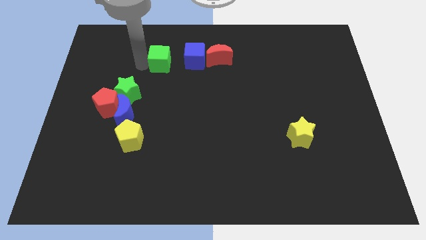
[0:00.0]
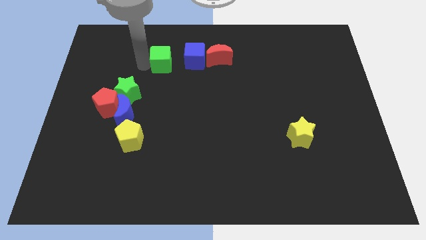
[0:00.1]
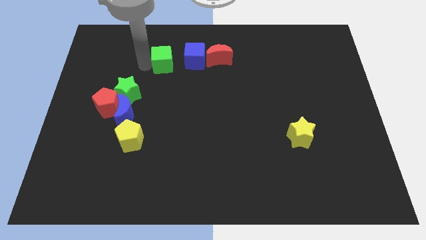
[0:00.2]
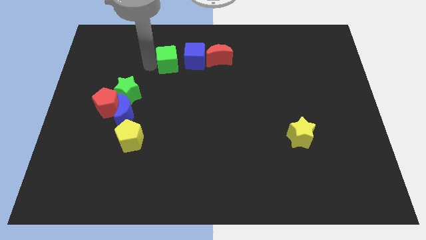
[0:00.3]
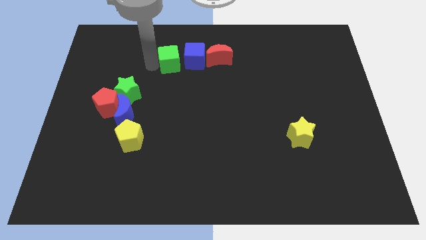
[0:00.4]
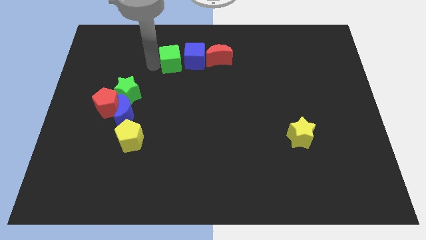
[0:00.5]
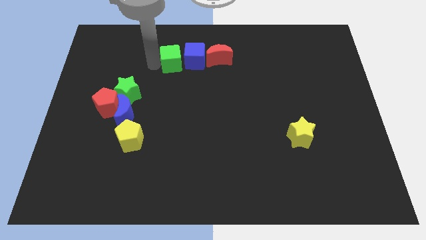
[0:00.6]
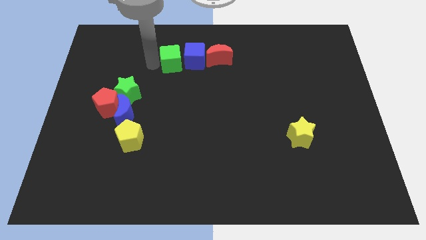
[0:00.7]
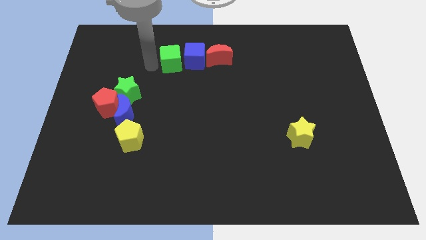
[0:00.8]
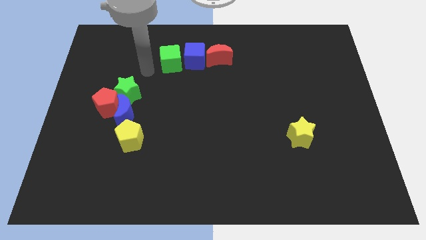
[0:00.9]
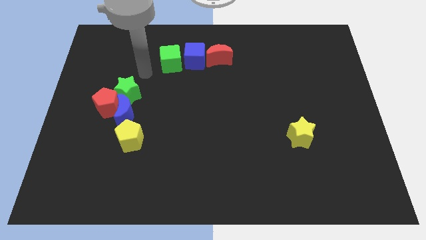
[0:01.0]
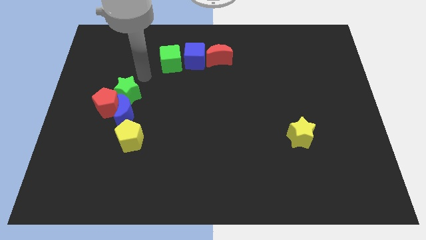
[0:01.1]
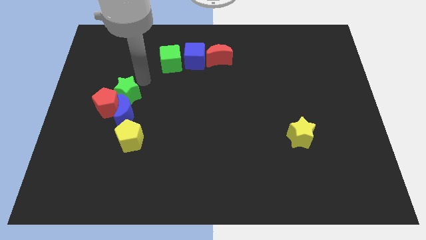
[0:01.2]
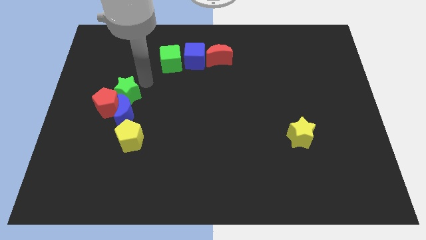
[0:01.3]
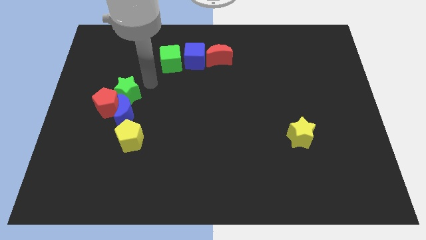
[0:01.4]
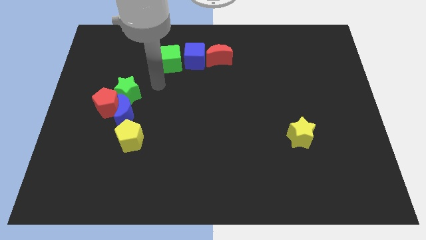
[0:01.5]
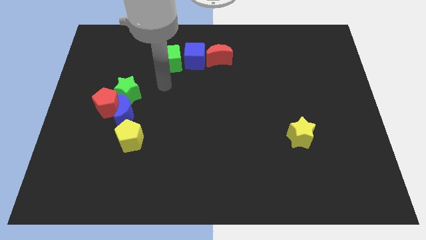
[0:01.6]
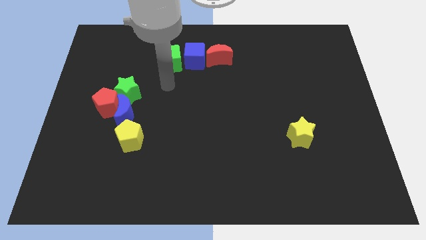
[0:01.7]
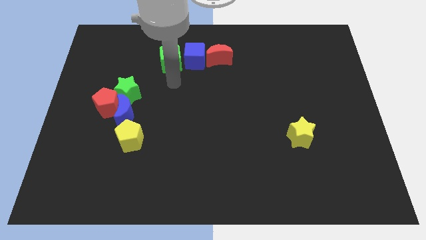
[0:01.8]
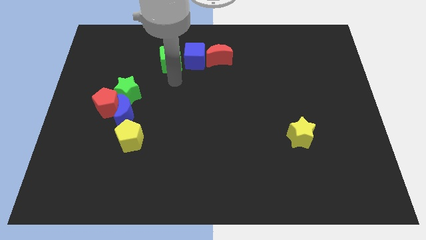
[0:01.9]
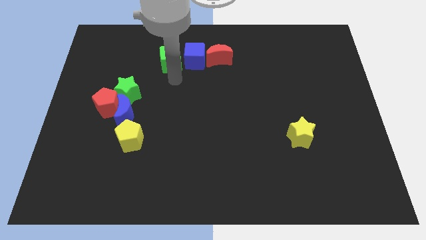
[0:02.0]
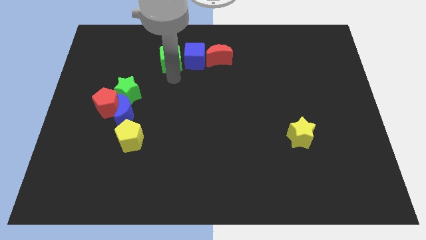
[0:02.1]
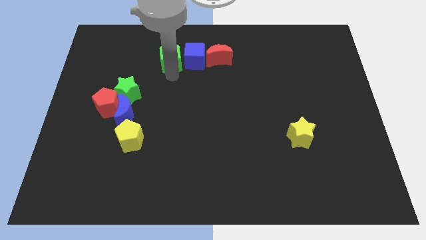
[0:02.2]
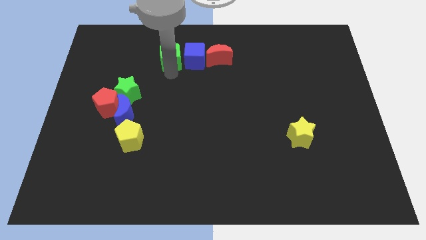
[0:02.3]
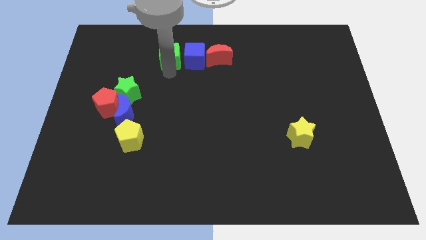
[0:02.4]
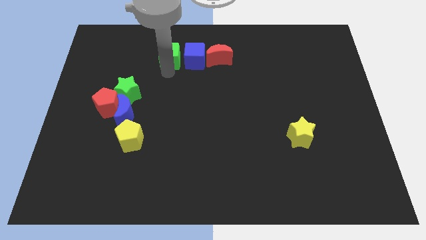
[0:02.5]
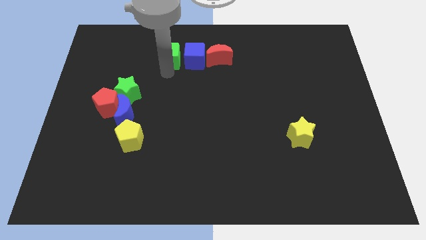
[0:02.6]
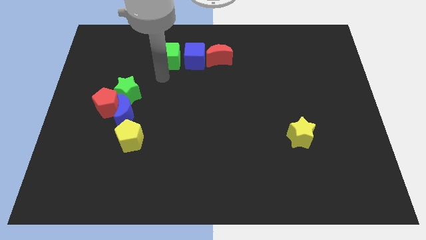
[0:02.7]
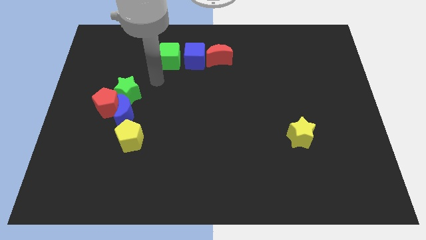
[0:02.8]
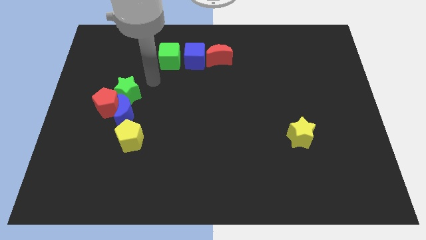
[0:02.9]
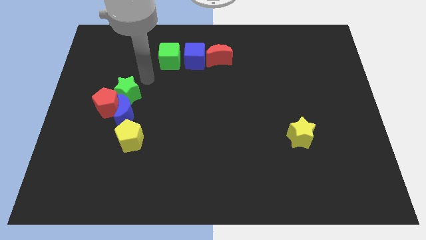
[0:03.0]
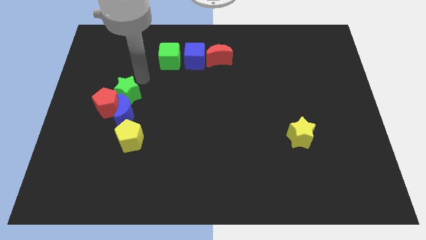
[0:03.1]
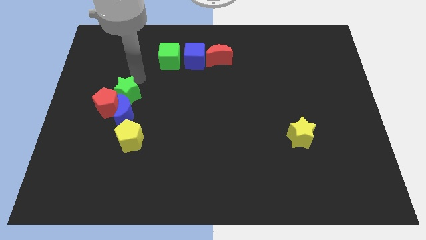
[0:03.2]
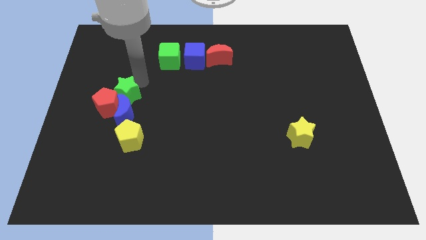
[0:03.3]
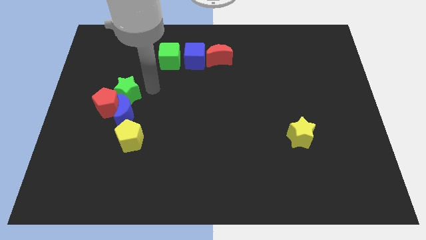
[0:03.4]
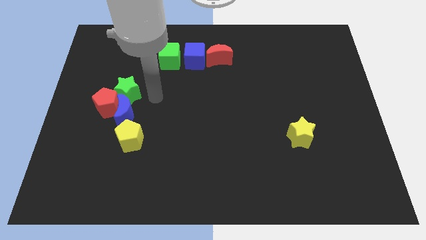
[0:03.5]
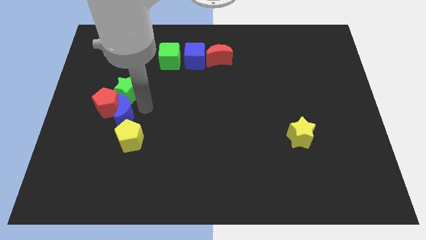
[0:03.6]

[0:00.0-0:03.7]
move the green cube close to the left side of the blue cube

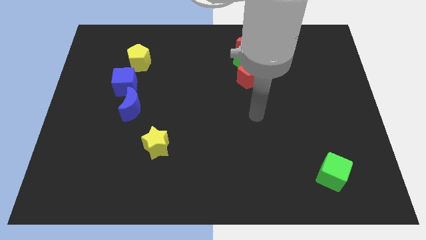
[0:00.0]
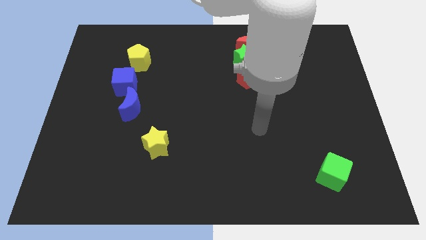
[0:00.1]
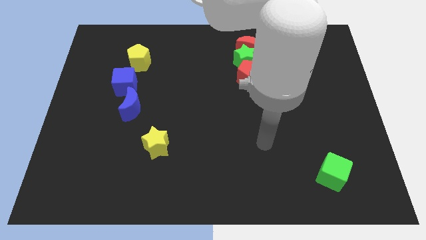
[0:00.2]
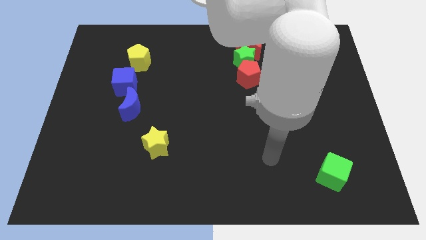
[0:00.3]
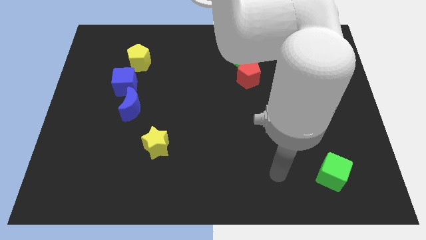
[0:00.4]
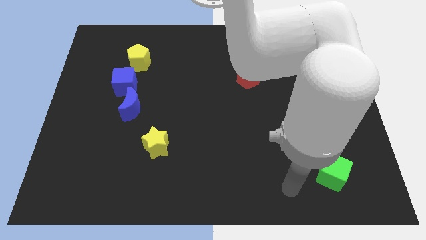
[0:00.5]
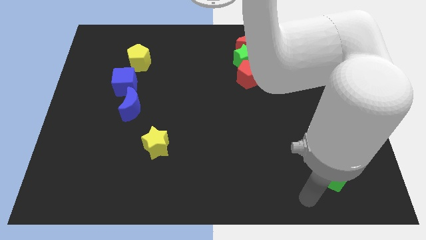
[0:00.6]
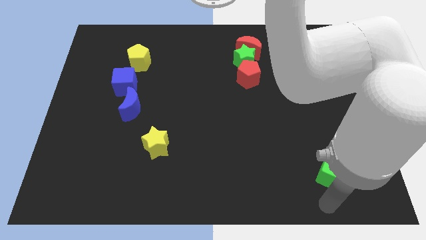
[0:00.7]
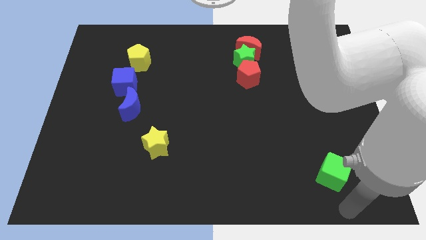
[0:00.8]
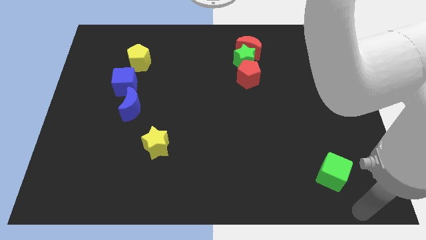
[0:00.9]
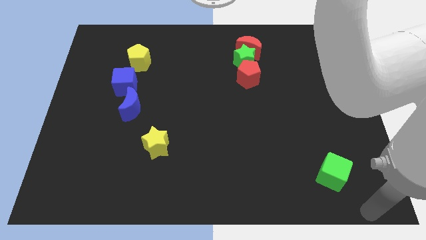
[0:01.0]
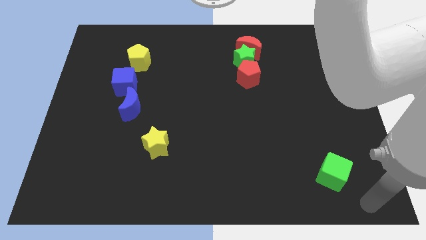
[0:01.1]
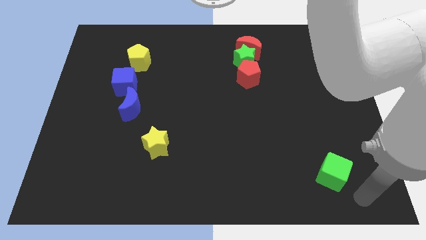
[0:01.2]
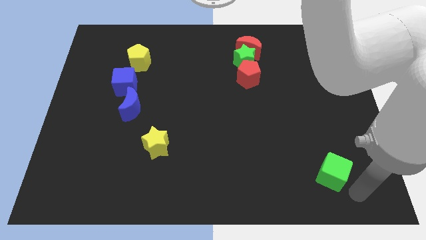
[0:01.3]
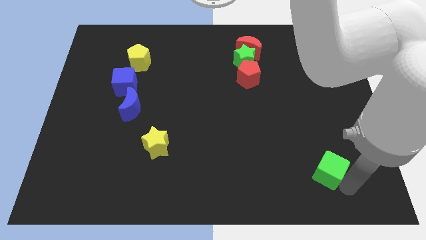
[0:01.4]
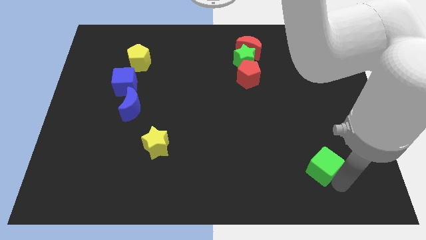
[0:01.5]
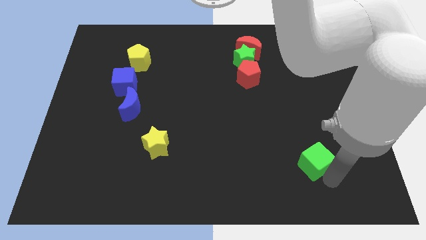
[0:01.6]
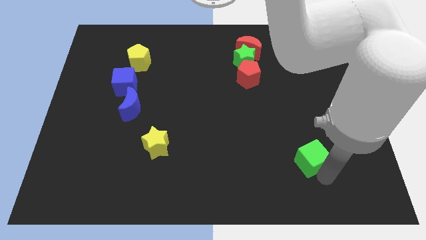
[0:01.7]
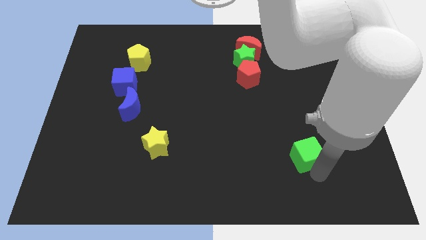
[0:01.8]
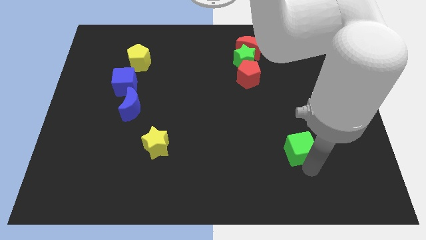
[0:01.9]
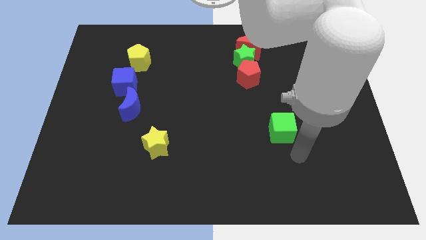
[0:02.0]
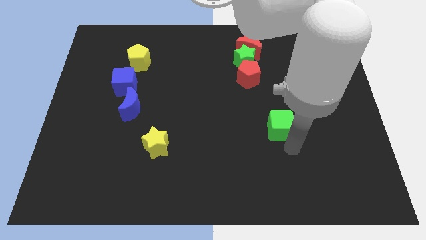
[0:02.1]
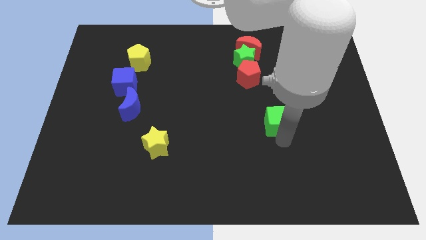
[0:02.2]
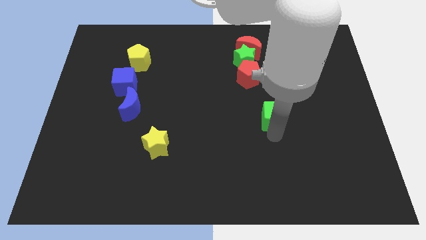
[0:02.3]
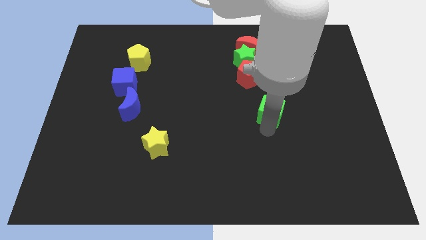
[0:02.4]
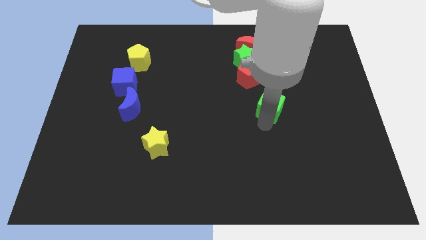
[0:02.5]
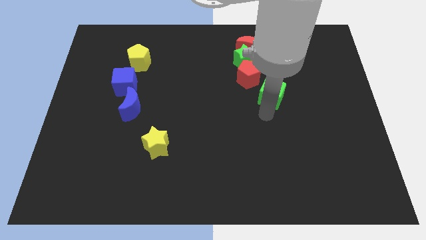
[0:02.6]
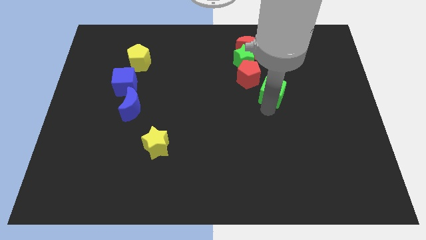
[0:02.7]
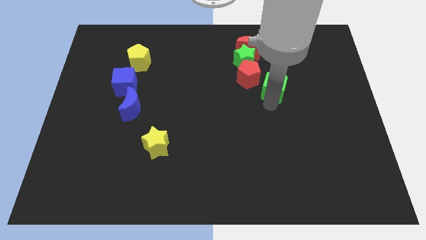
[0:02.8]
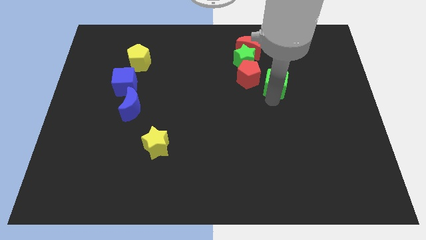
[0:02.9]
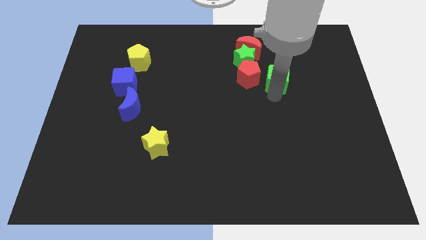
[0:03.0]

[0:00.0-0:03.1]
push green cube to the bottom right of red pentagon

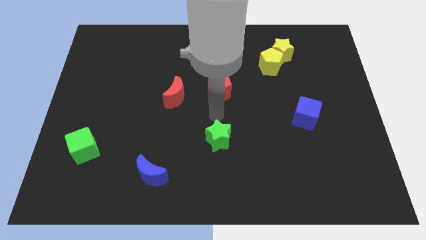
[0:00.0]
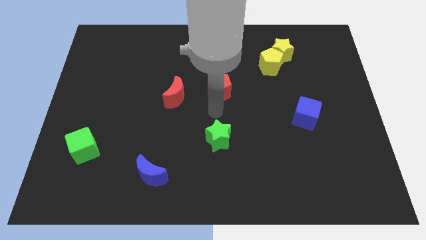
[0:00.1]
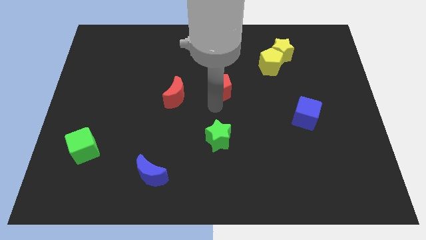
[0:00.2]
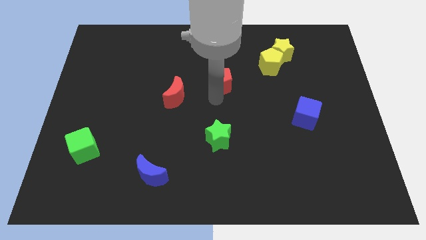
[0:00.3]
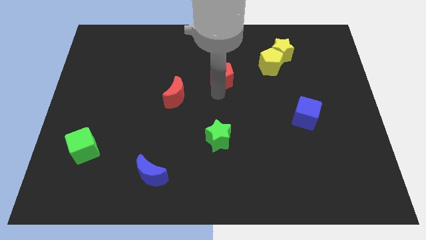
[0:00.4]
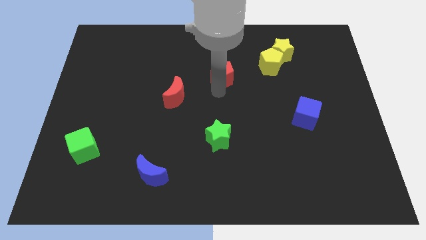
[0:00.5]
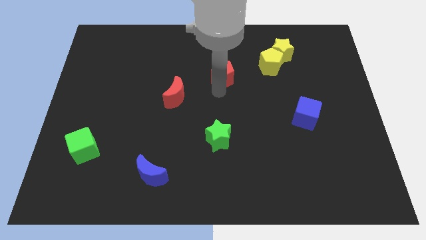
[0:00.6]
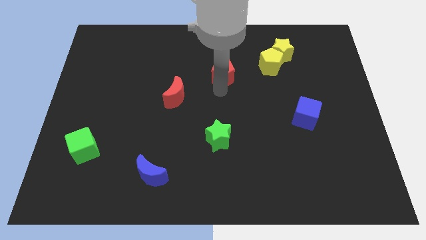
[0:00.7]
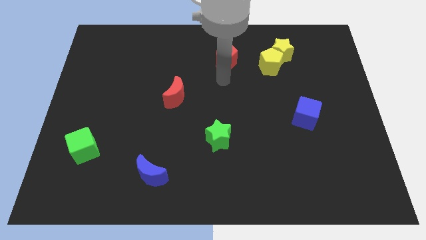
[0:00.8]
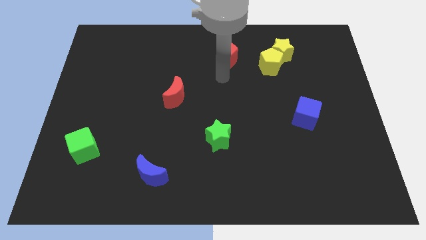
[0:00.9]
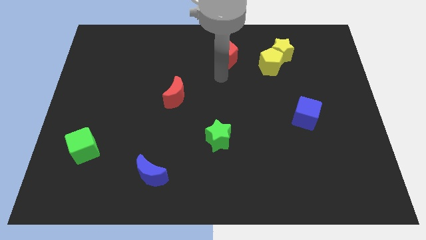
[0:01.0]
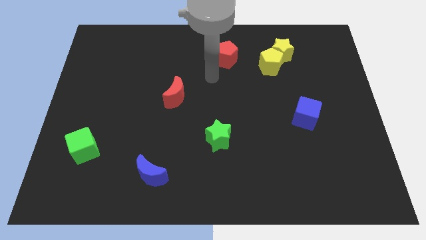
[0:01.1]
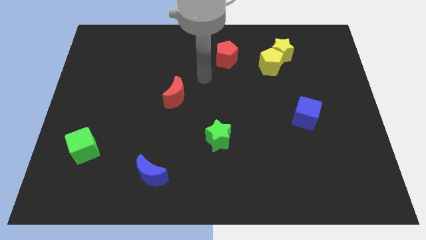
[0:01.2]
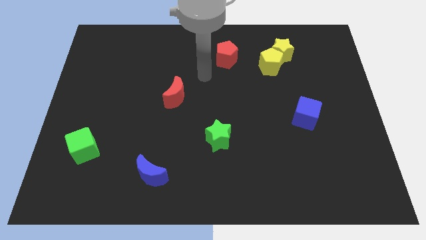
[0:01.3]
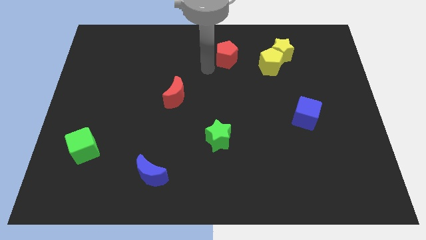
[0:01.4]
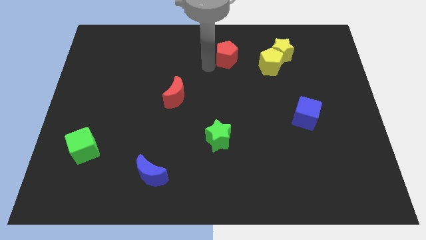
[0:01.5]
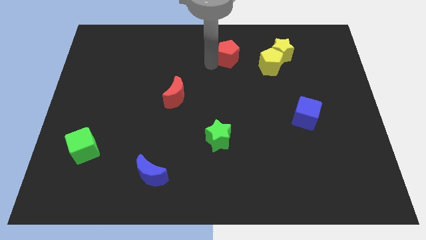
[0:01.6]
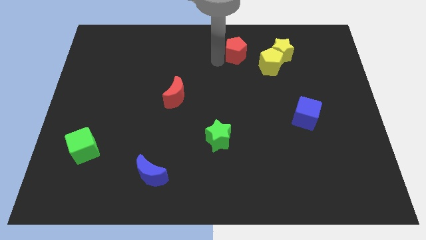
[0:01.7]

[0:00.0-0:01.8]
place the red pentagon to the left of the yellow blocks

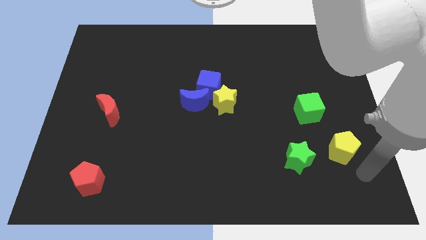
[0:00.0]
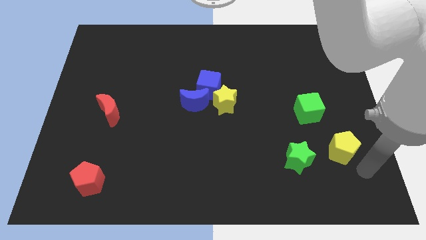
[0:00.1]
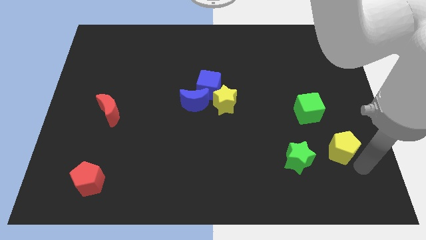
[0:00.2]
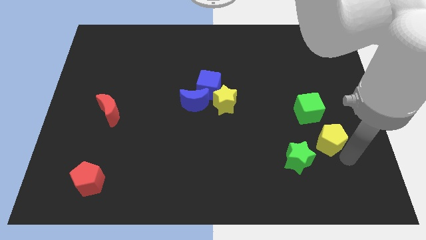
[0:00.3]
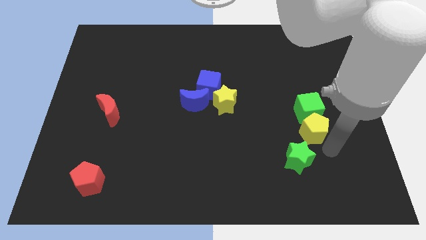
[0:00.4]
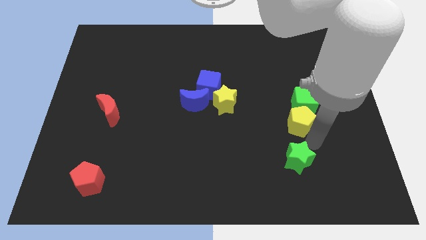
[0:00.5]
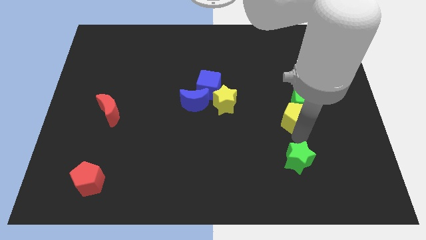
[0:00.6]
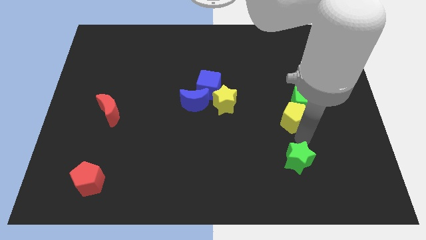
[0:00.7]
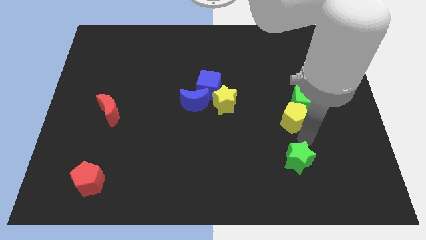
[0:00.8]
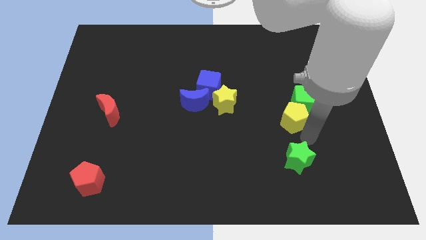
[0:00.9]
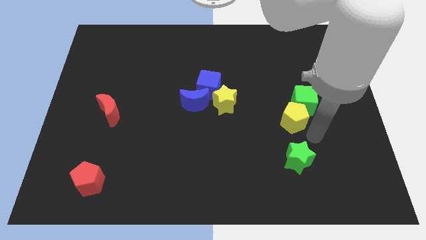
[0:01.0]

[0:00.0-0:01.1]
place yellow pentagon above green star
